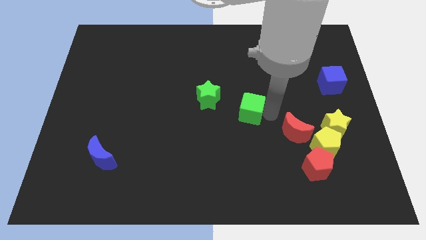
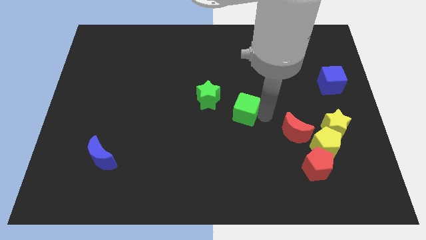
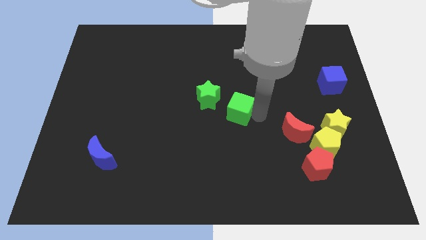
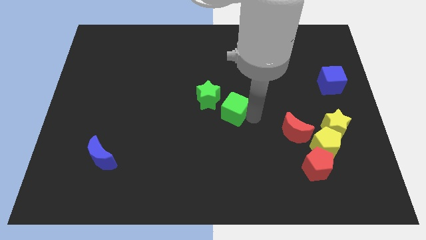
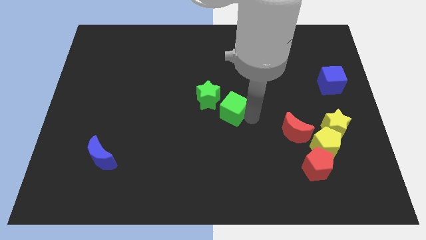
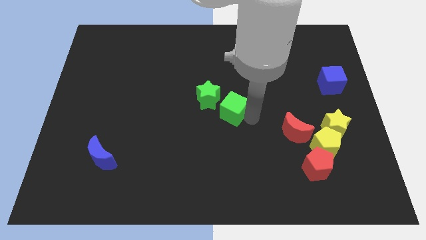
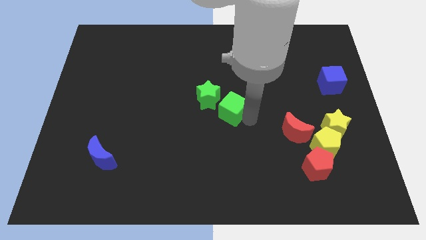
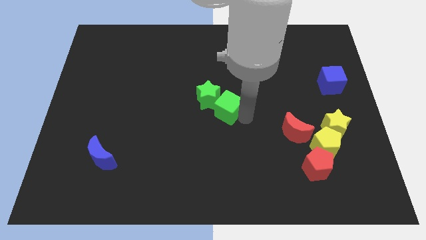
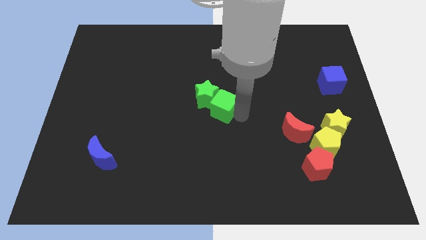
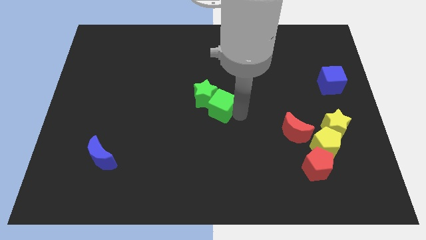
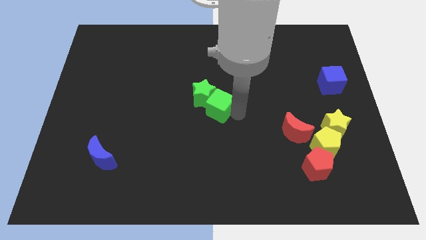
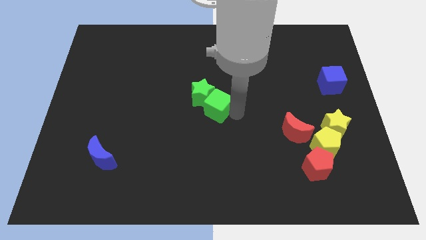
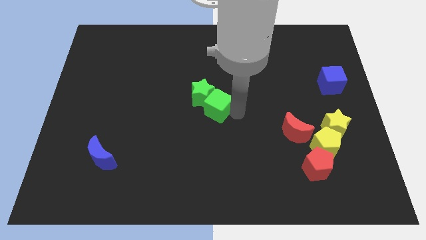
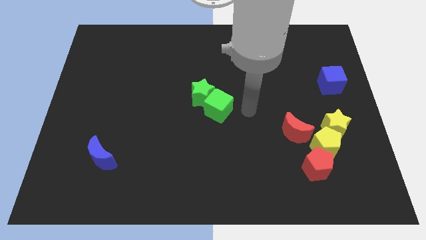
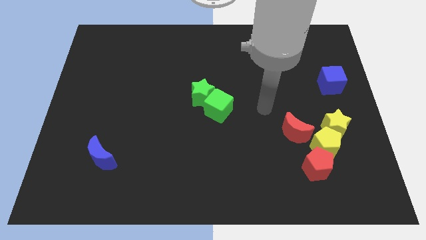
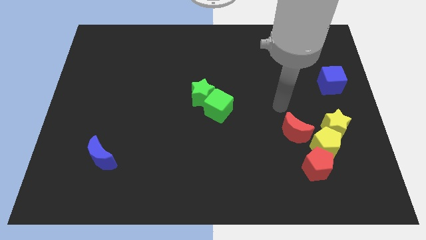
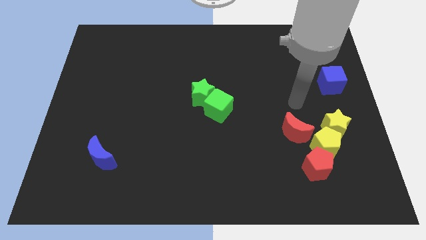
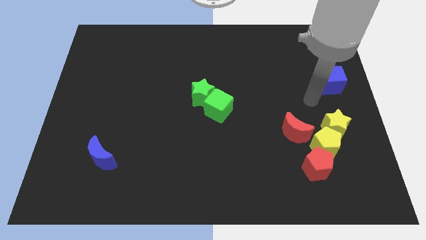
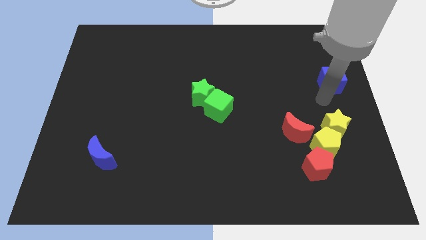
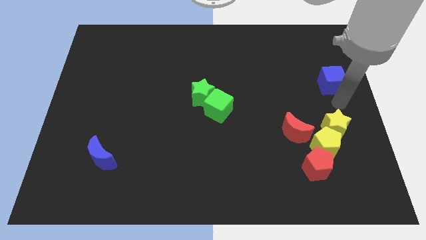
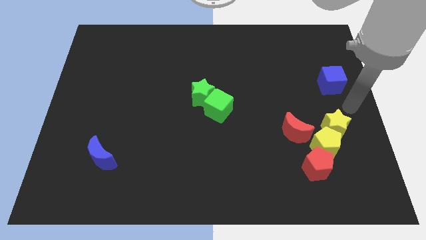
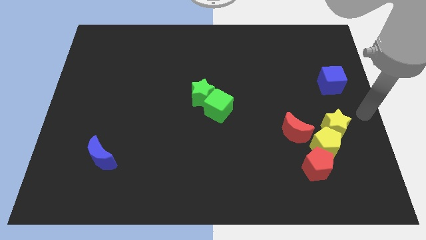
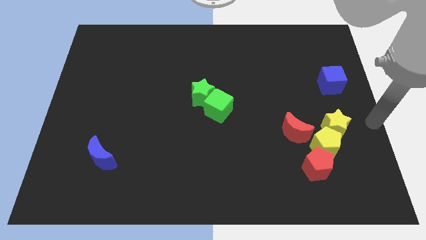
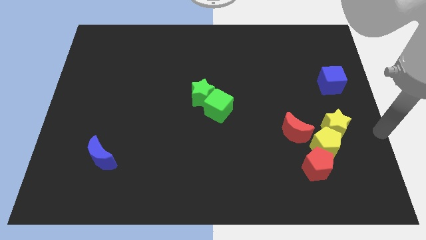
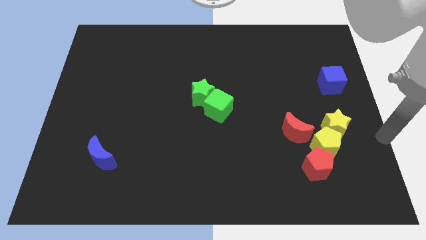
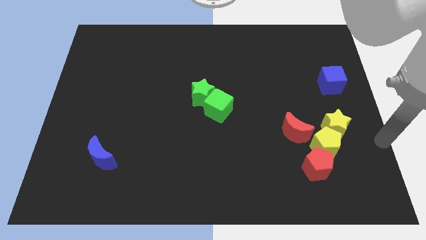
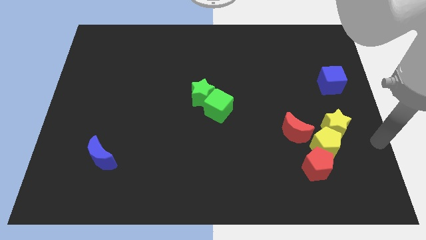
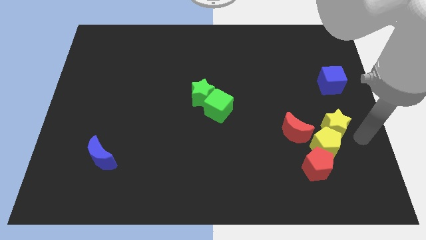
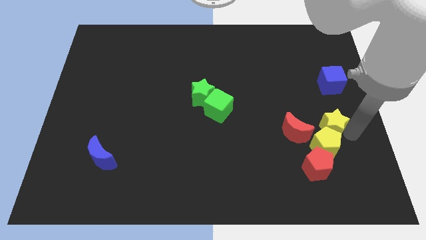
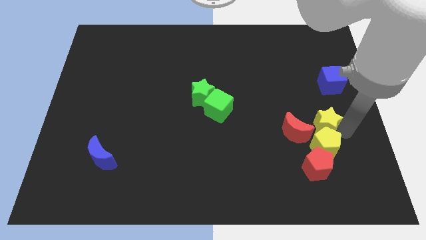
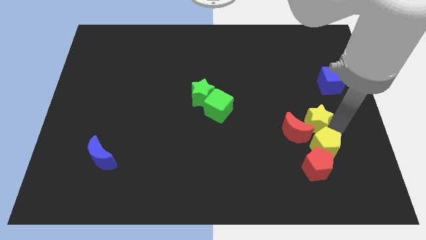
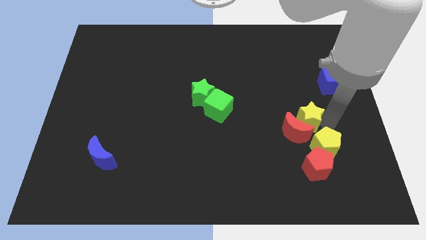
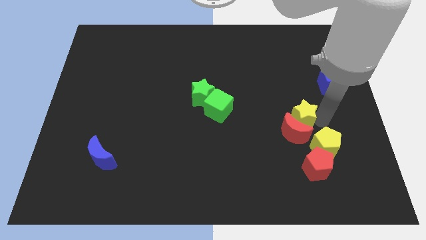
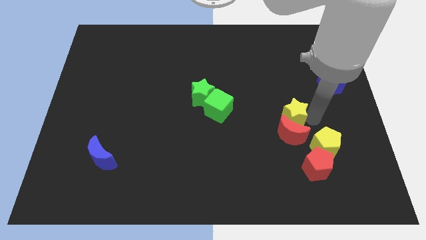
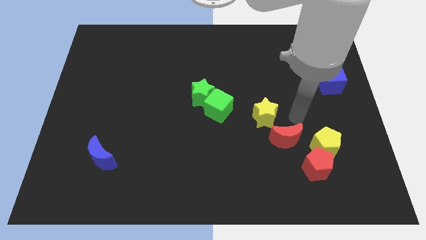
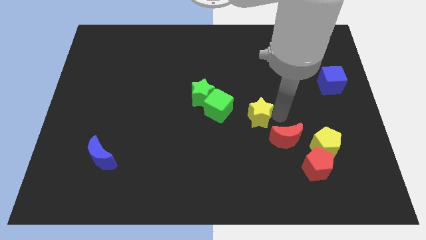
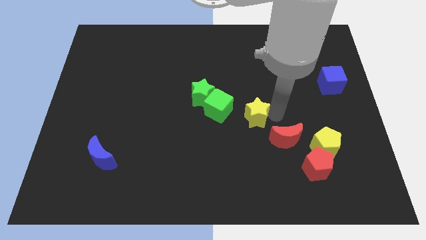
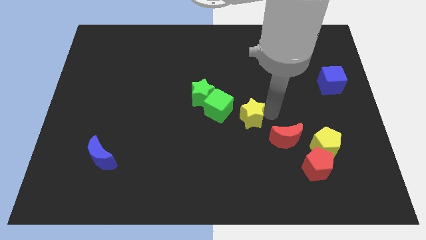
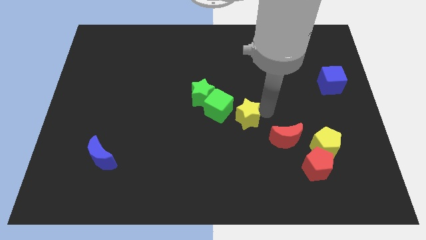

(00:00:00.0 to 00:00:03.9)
push the green cube into the green star

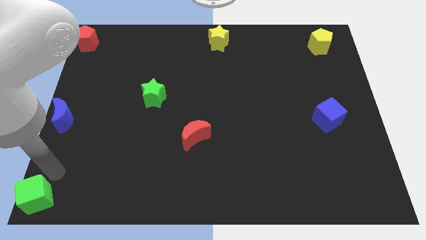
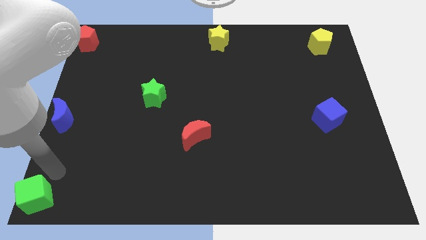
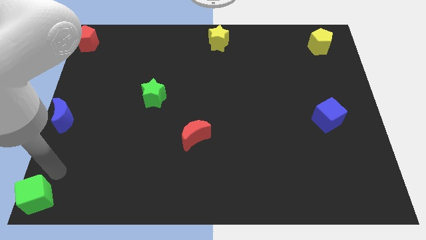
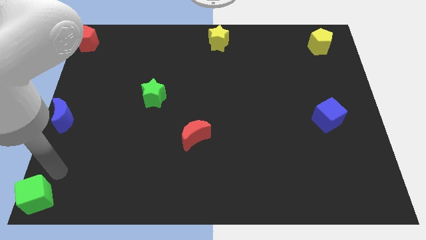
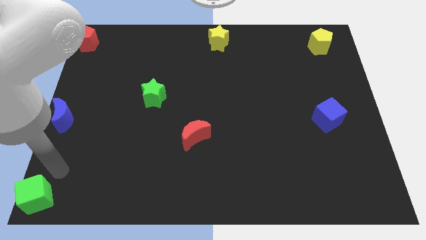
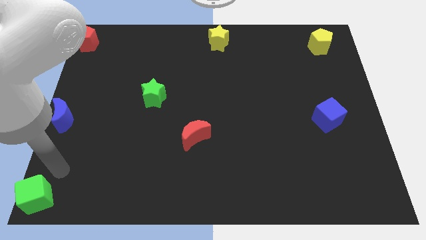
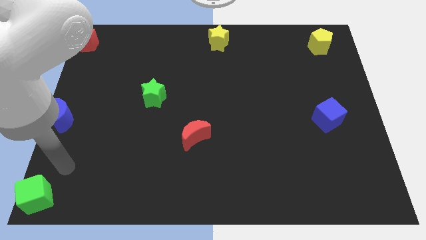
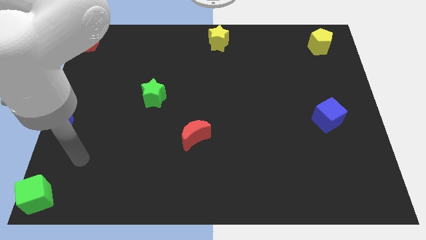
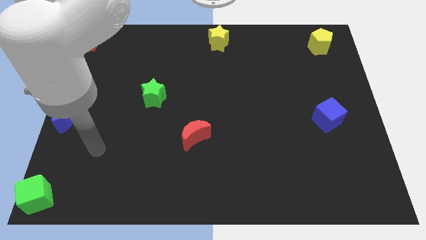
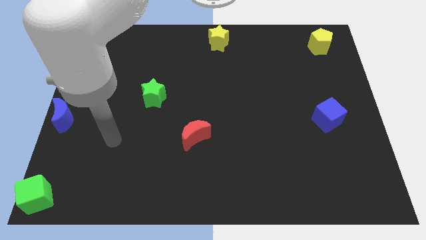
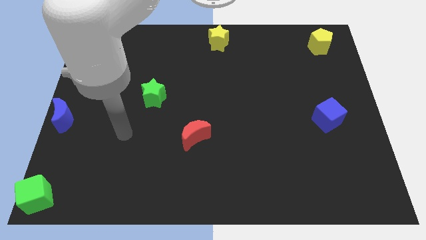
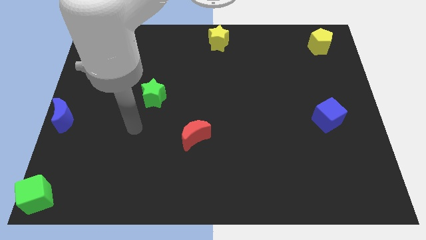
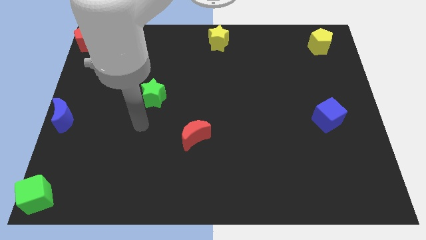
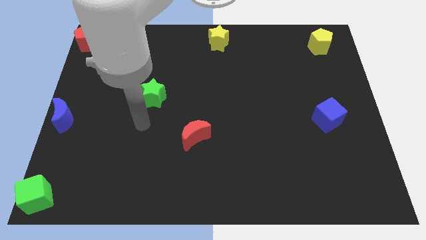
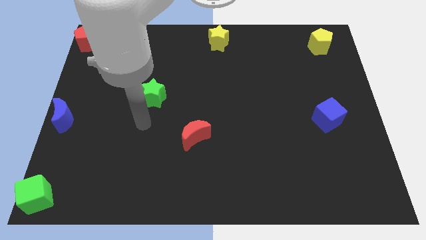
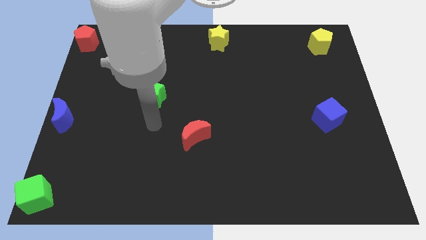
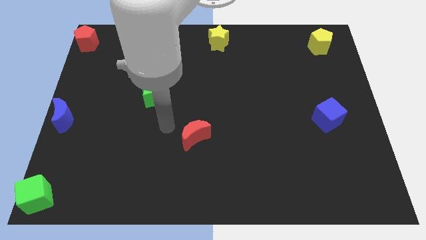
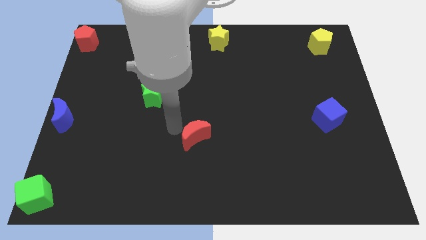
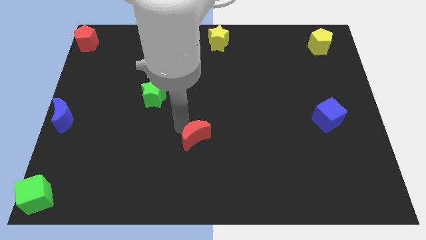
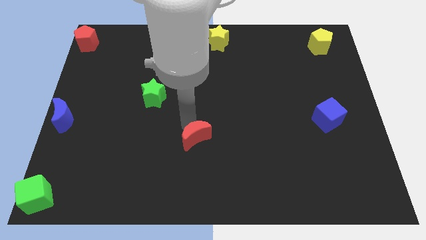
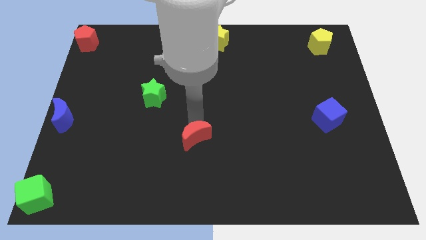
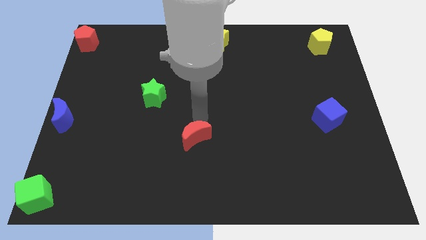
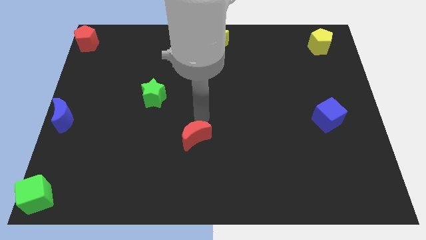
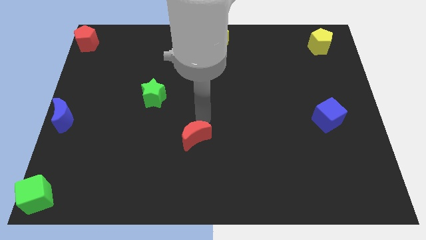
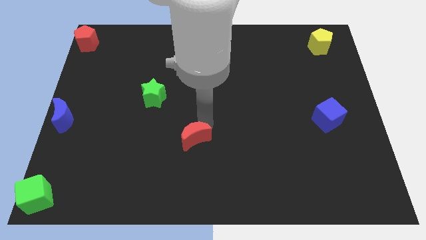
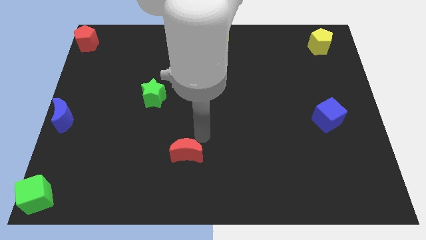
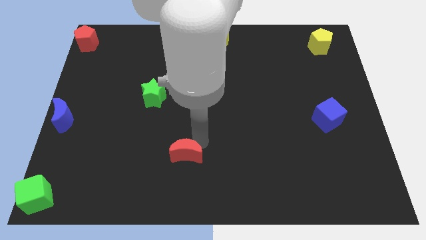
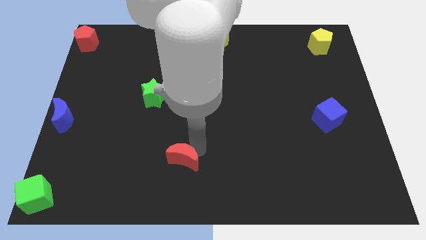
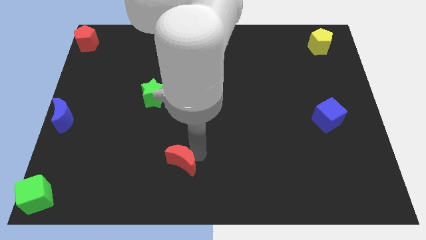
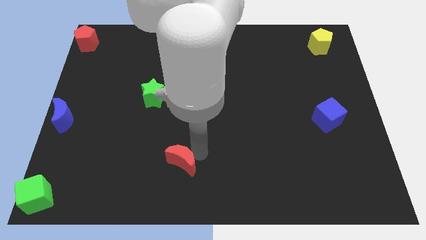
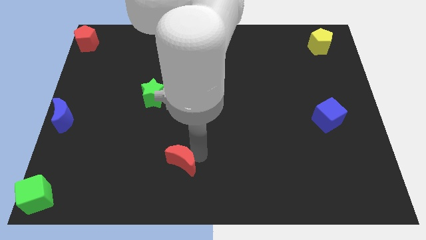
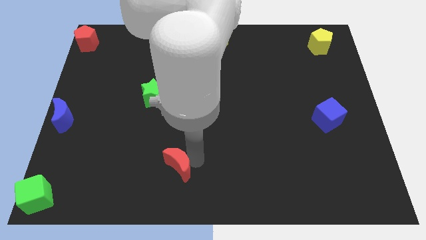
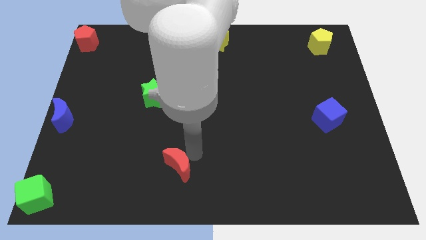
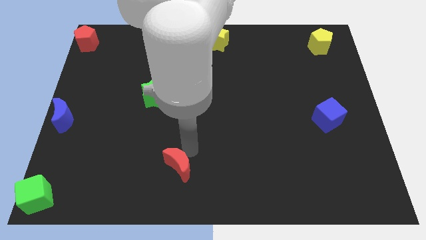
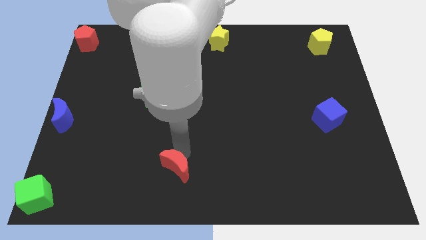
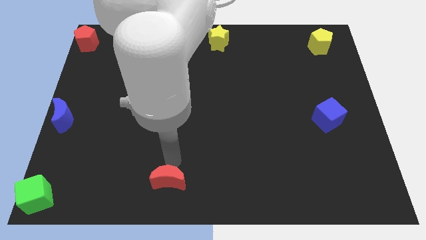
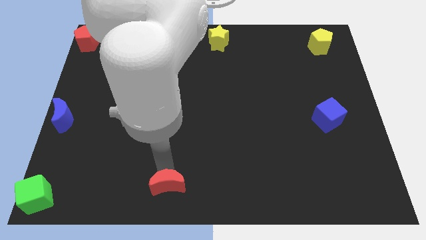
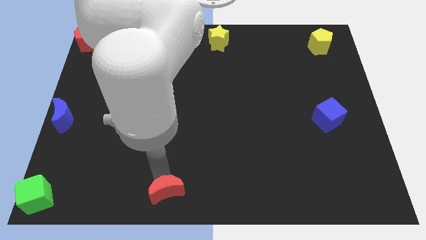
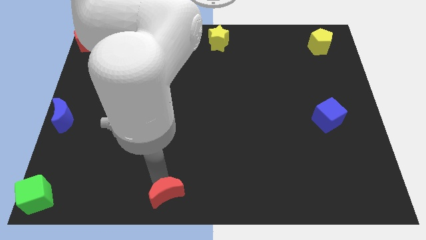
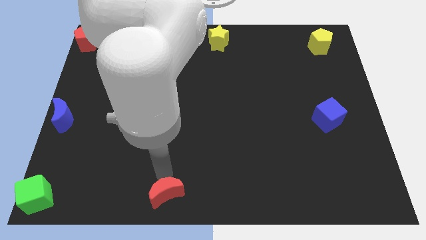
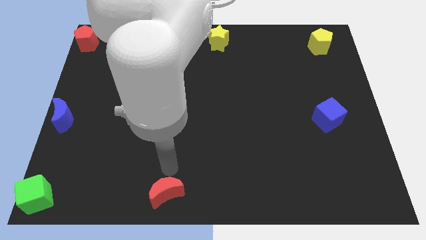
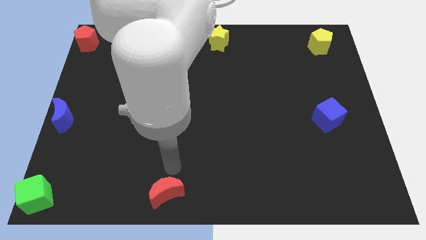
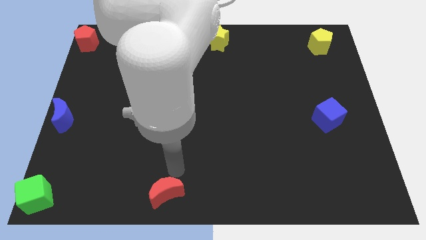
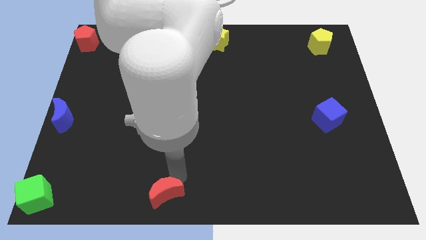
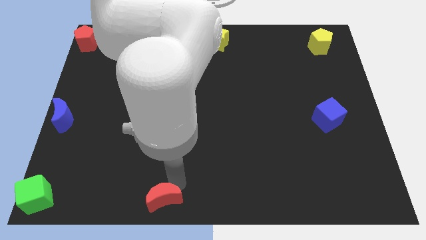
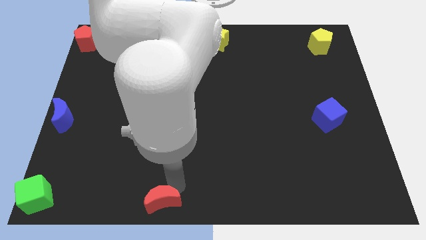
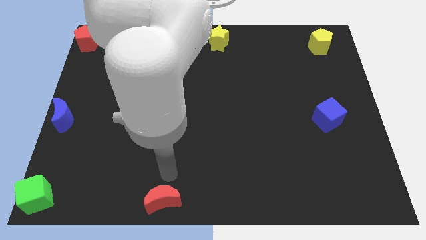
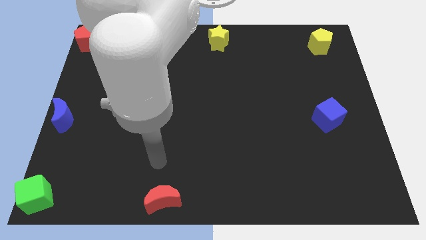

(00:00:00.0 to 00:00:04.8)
slide the red crescent at the bottom center of the board

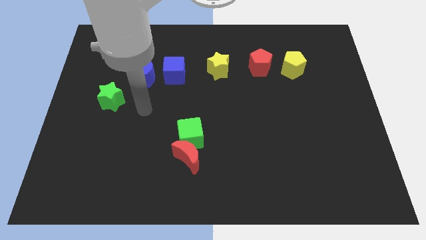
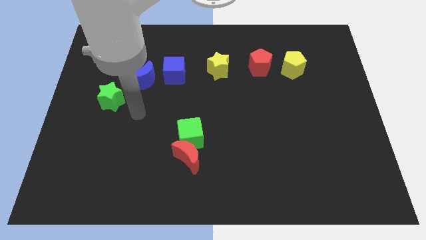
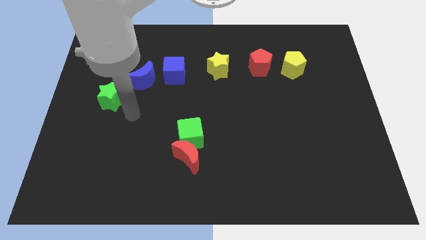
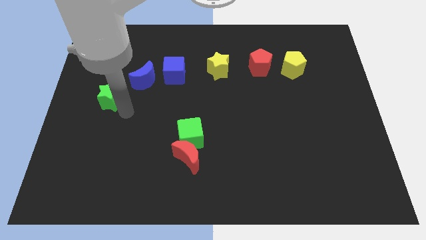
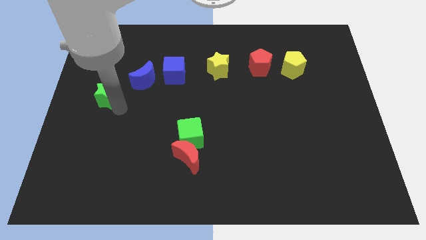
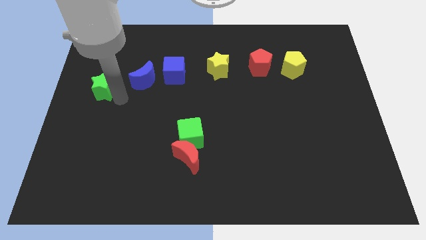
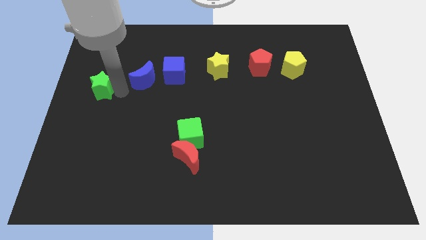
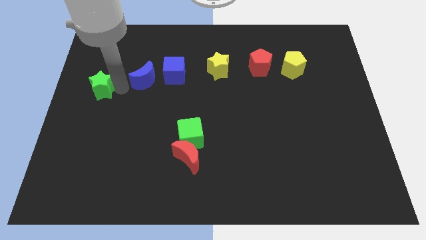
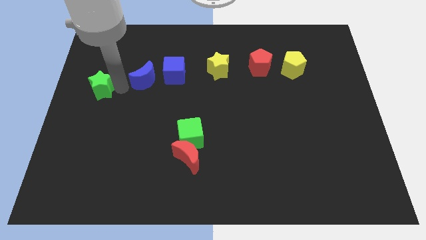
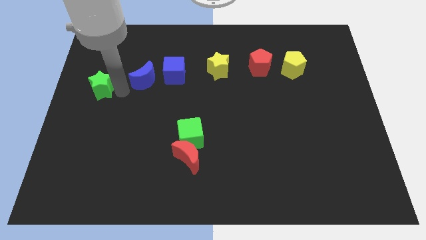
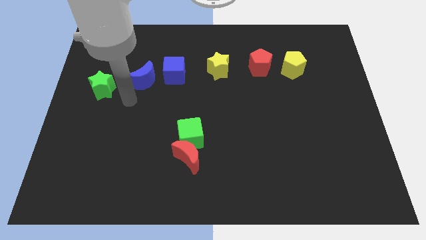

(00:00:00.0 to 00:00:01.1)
slightly move the green star to the left side of the blue moon
